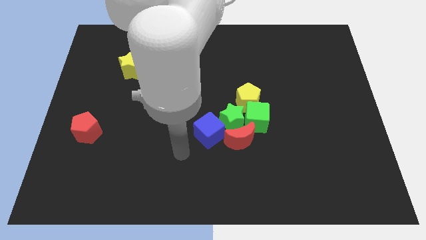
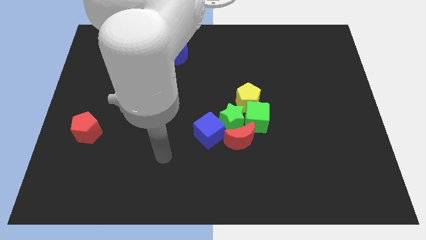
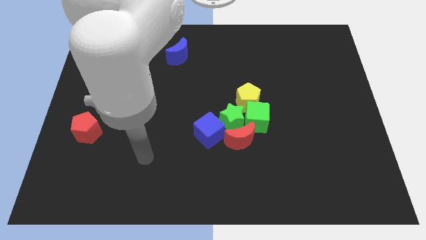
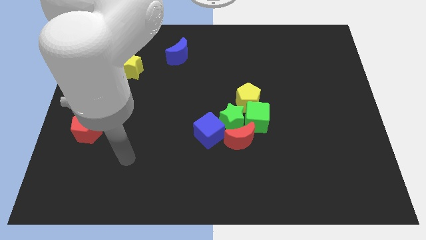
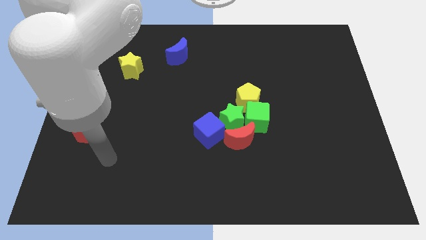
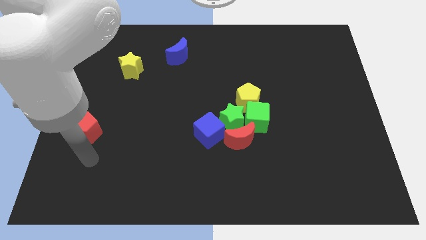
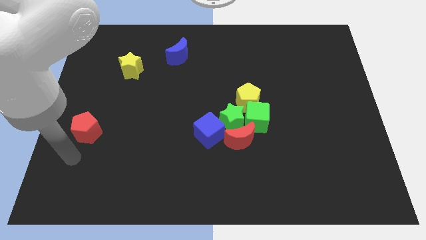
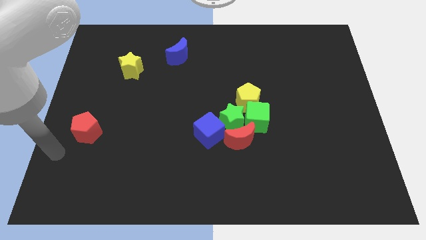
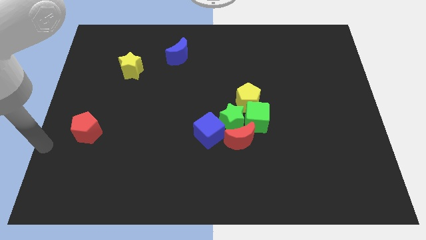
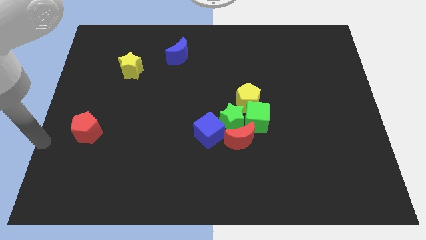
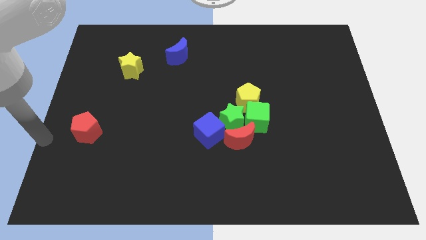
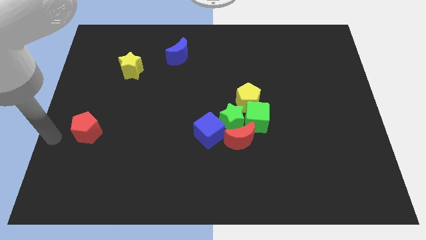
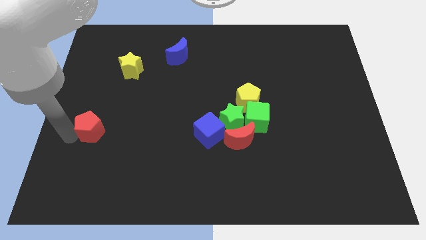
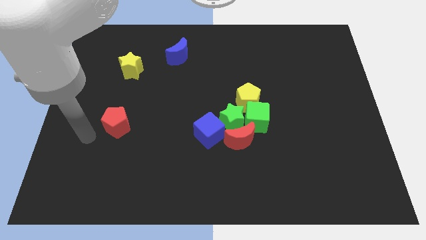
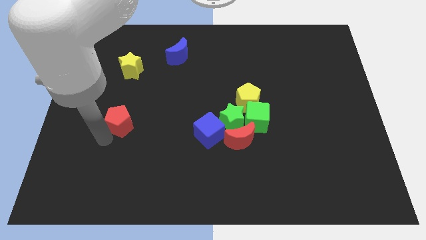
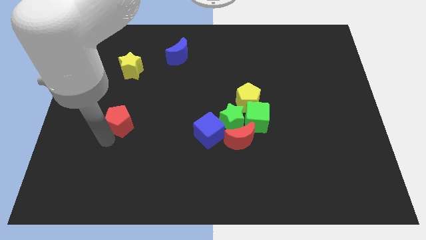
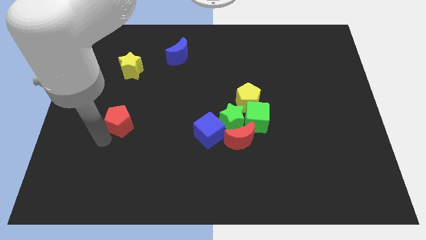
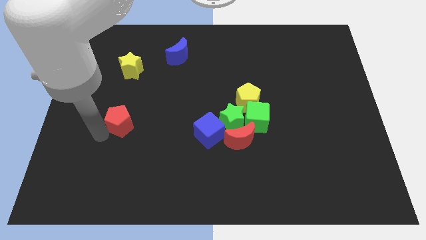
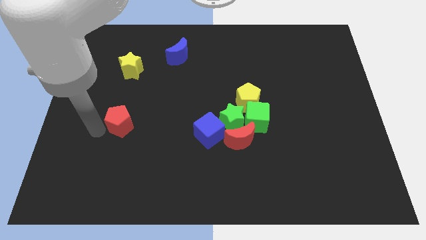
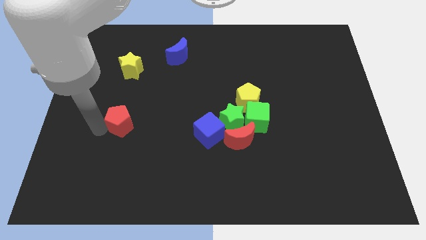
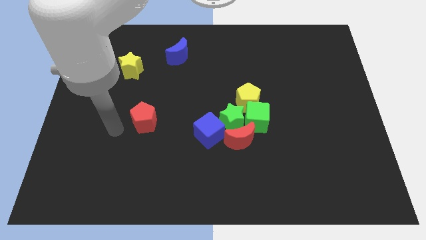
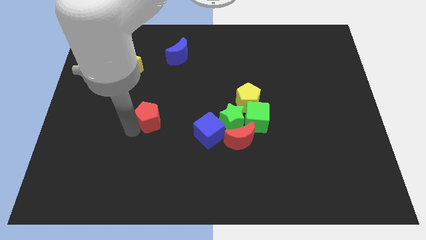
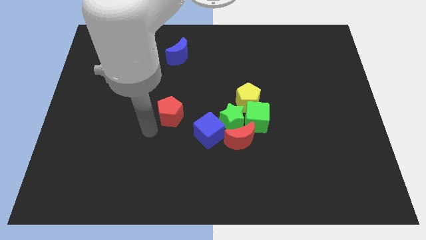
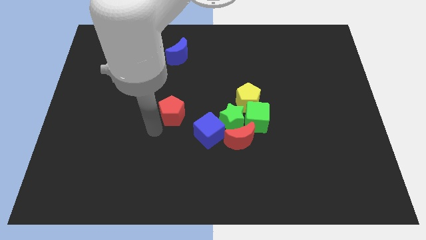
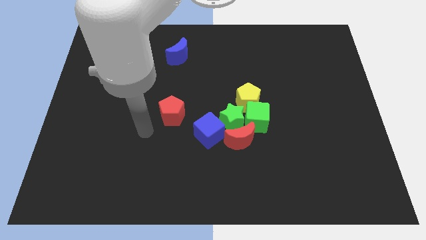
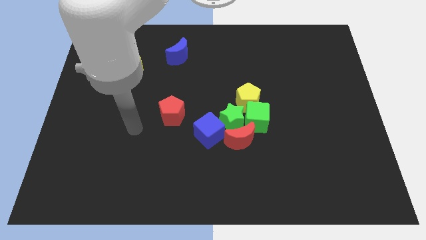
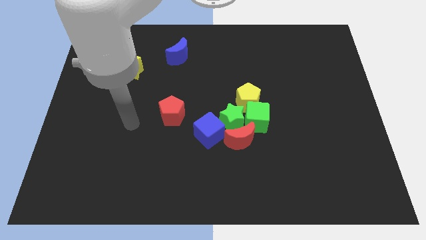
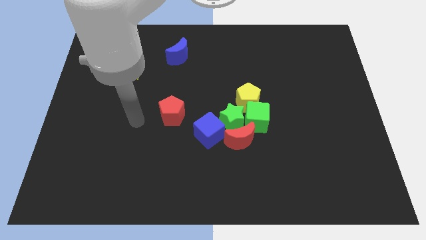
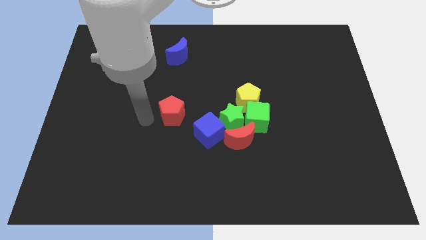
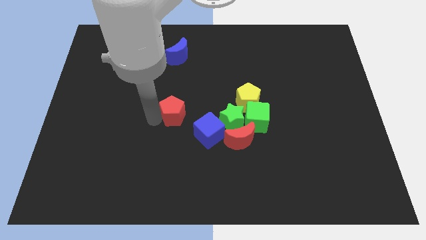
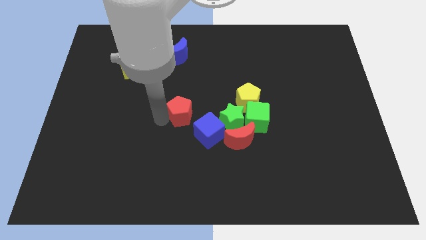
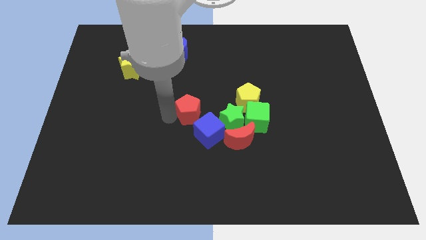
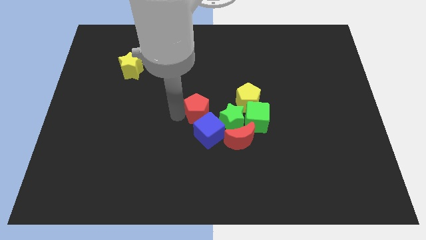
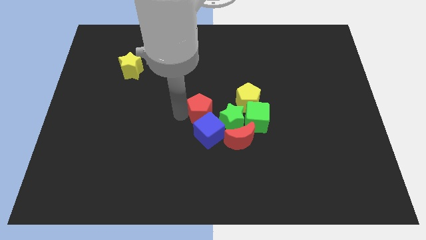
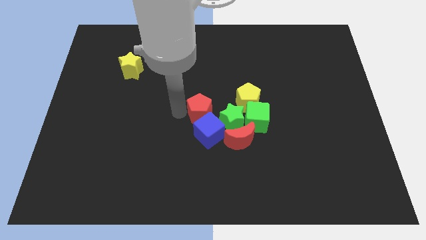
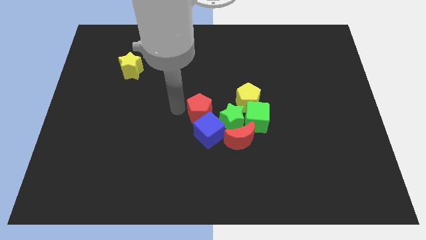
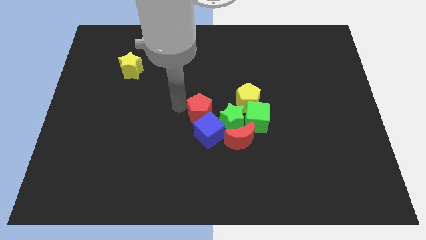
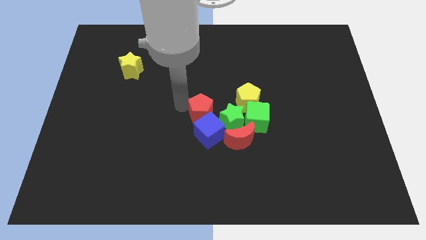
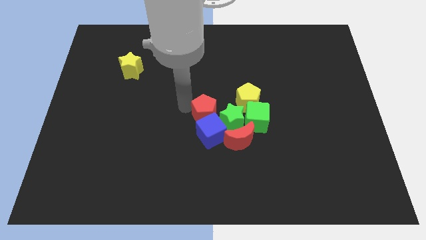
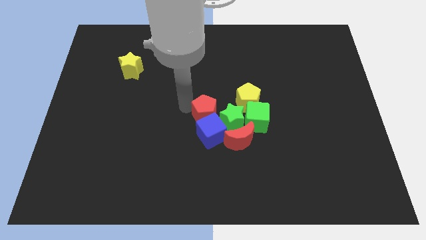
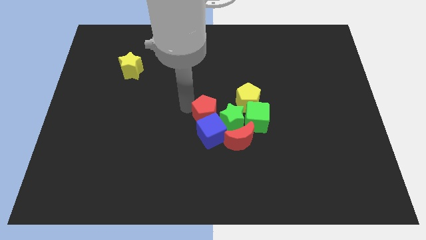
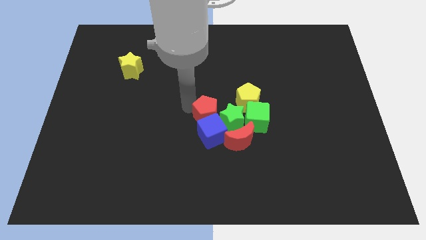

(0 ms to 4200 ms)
push the red pentagon into the top of the blue cube

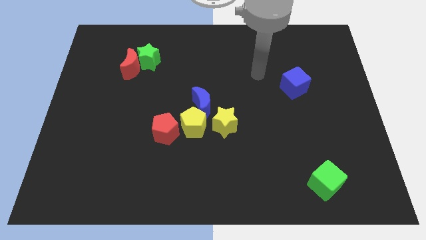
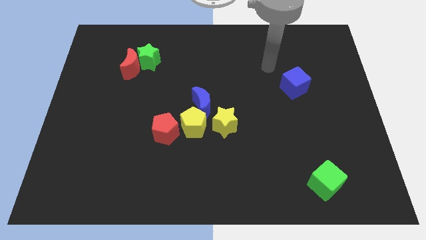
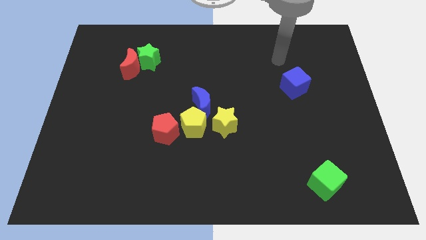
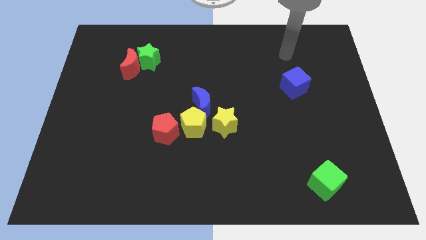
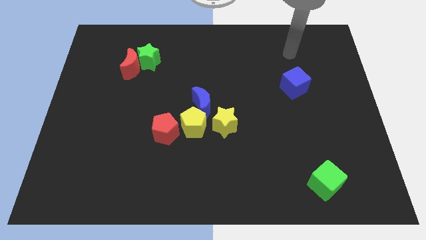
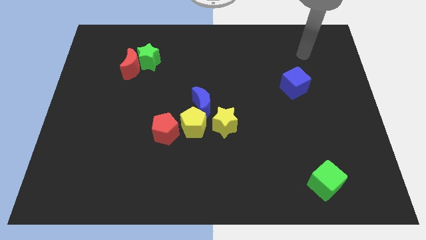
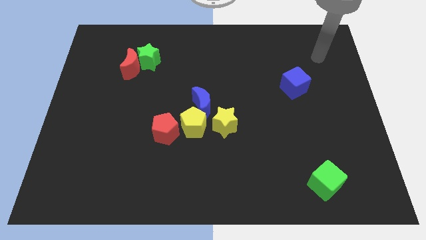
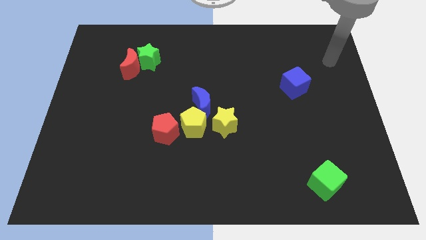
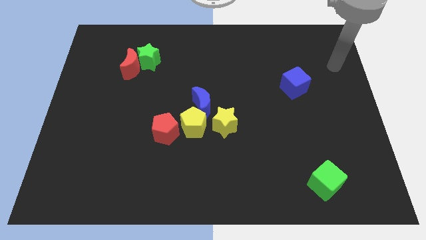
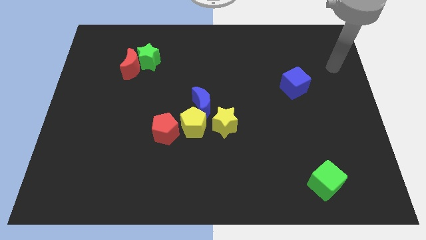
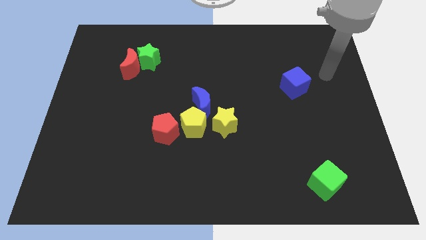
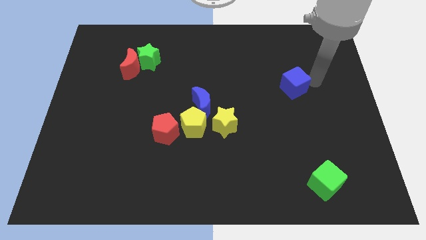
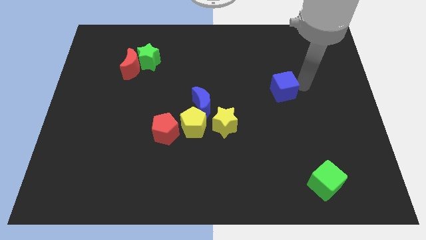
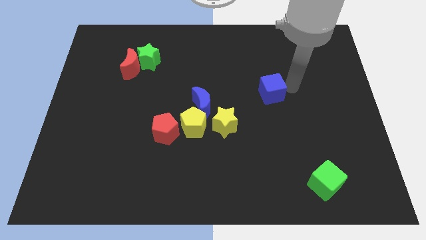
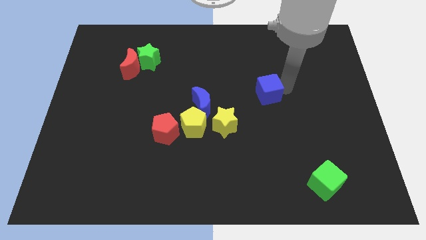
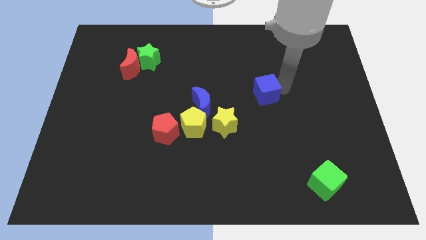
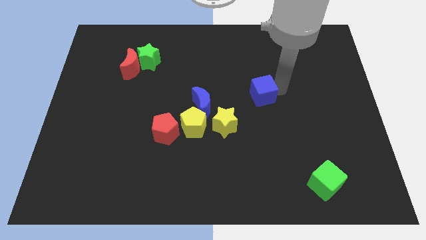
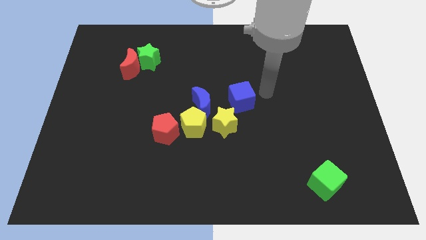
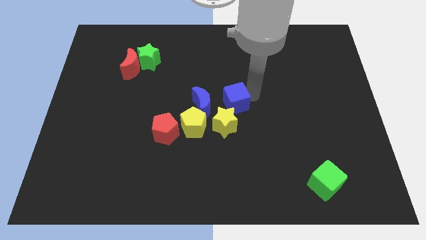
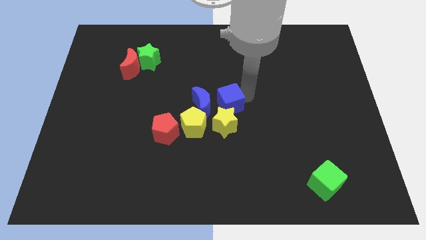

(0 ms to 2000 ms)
push blue cube towards the blue crescent

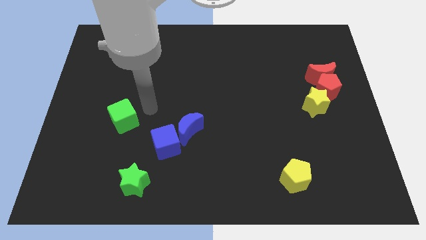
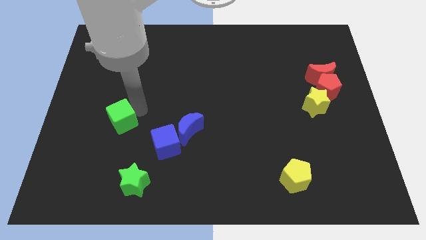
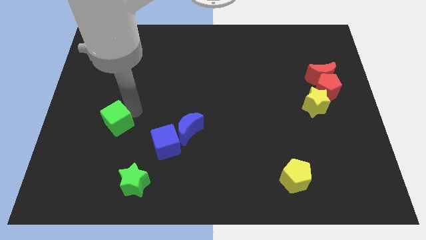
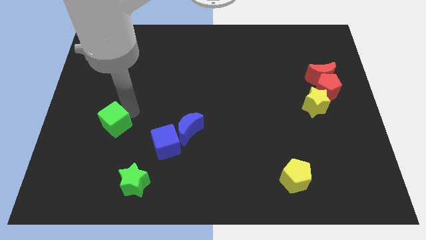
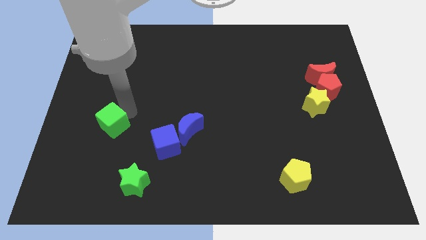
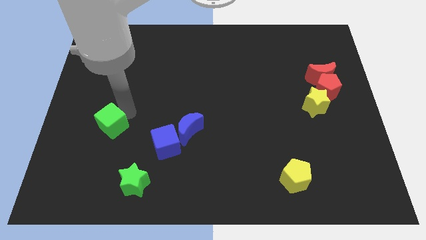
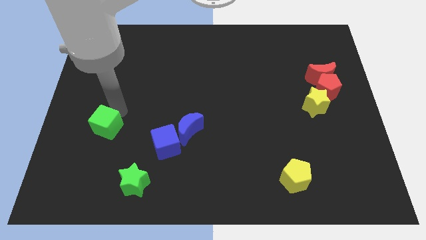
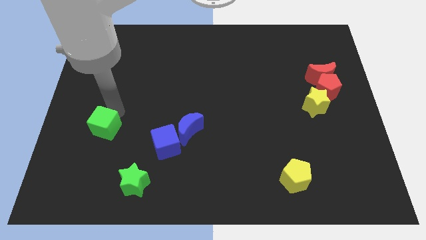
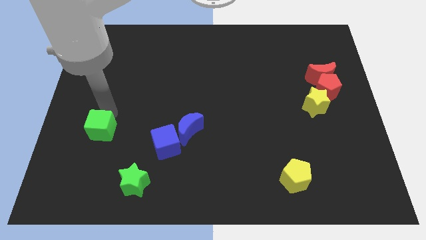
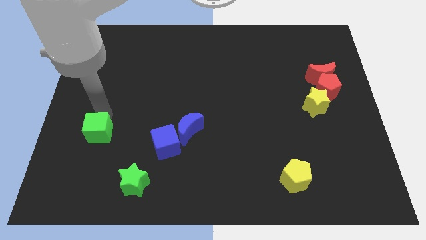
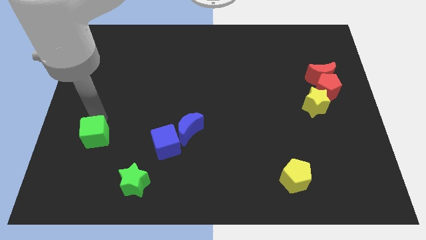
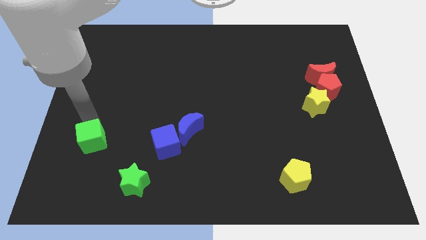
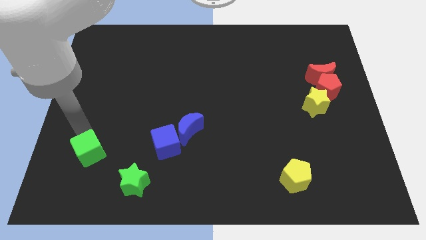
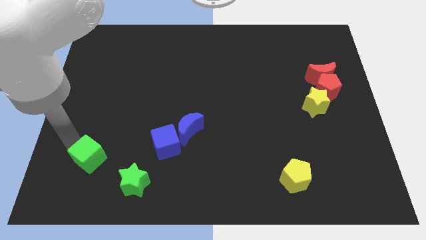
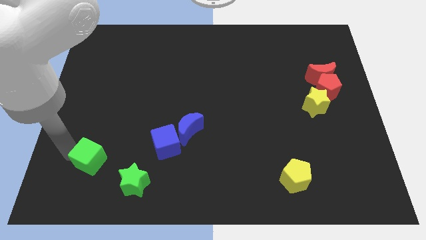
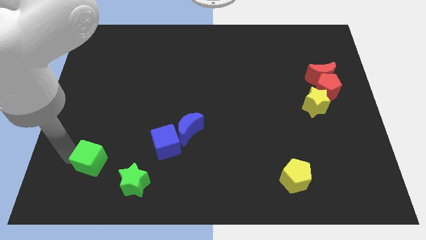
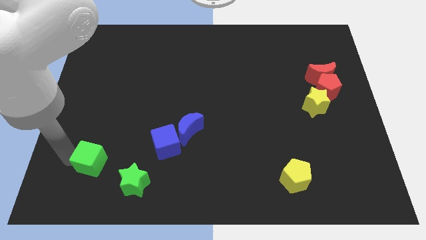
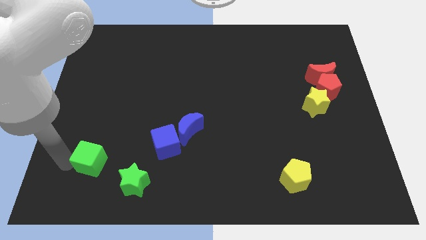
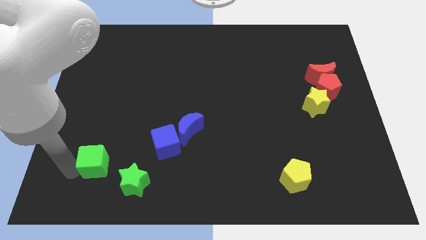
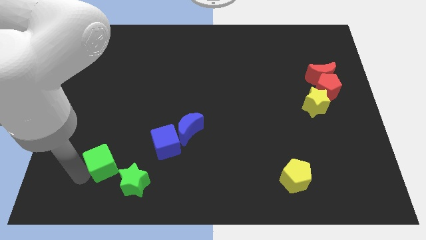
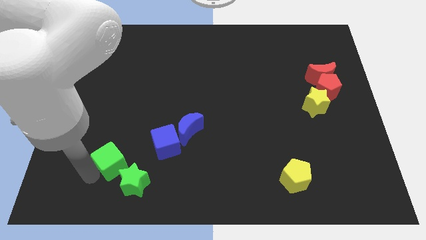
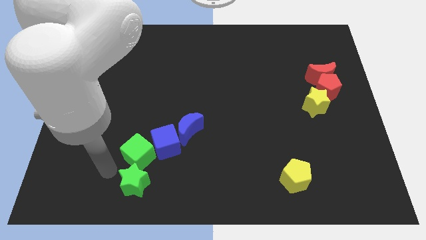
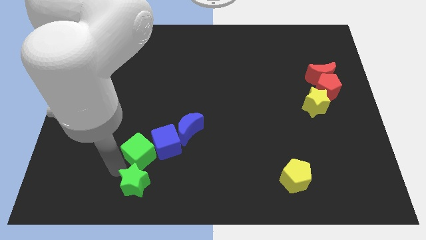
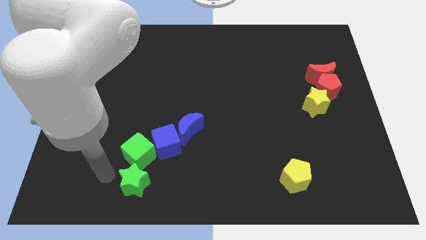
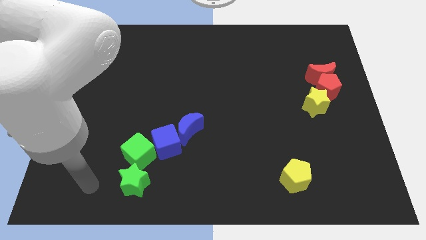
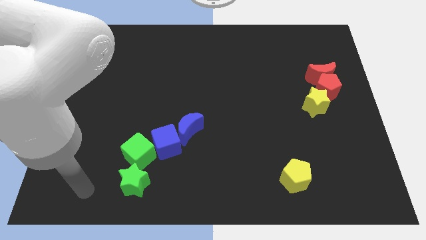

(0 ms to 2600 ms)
move green cube above green star
